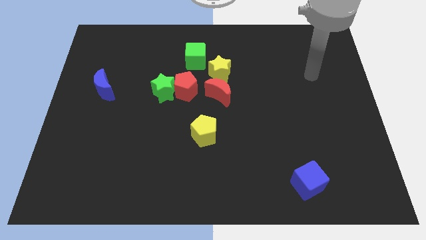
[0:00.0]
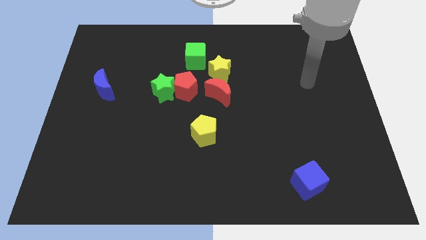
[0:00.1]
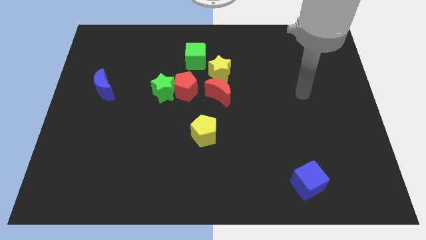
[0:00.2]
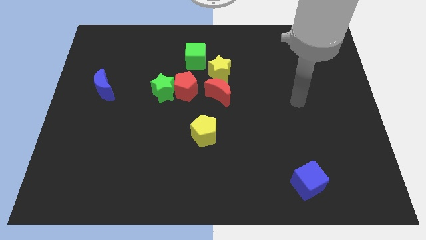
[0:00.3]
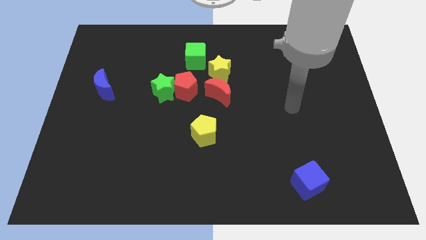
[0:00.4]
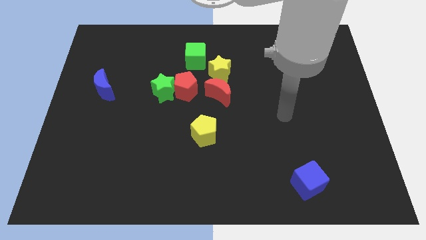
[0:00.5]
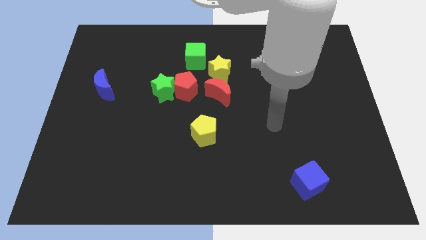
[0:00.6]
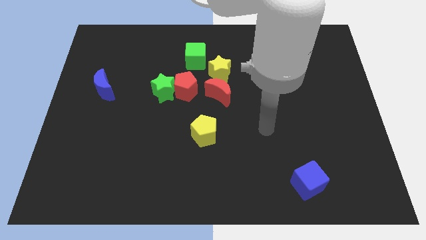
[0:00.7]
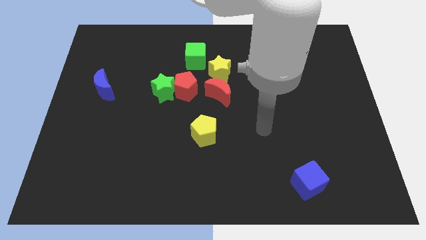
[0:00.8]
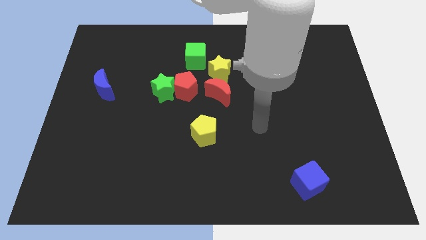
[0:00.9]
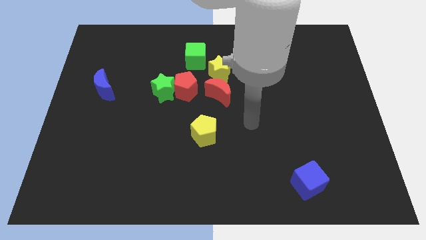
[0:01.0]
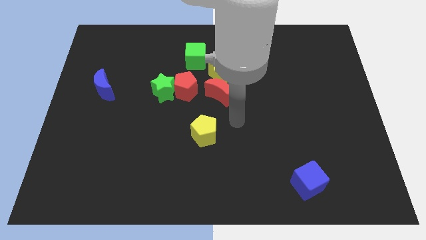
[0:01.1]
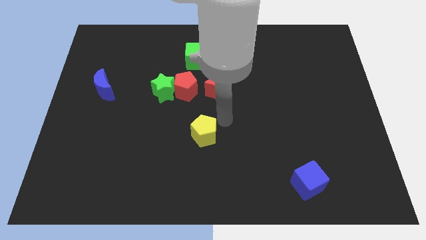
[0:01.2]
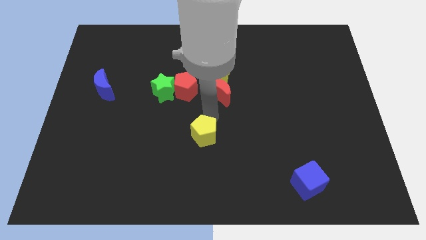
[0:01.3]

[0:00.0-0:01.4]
move your arm above the yellow pentagon

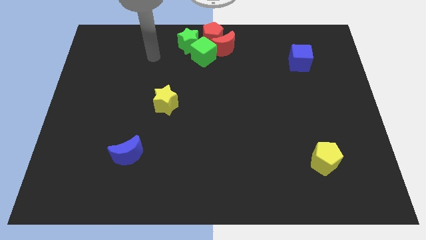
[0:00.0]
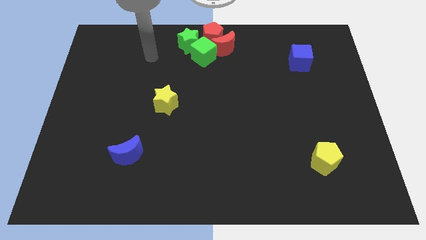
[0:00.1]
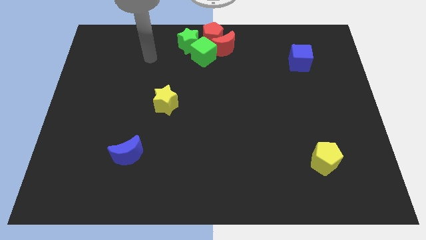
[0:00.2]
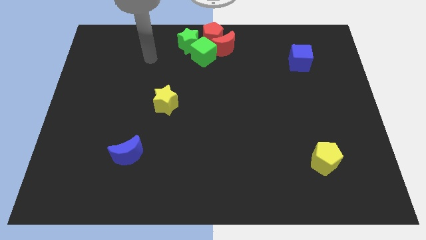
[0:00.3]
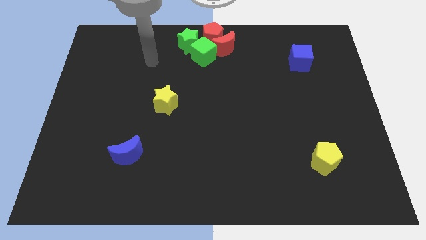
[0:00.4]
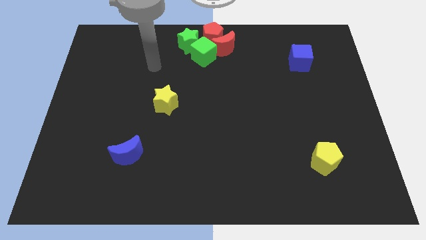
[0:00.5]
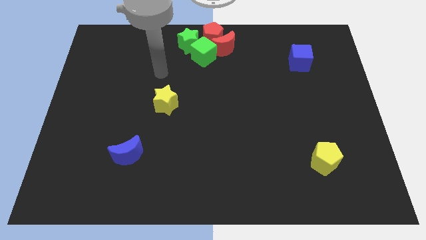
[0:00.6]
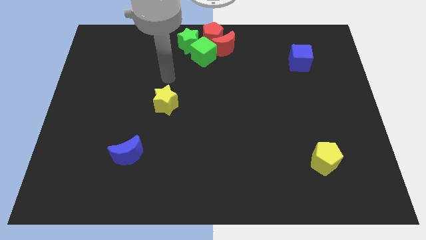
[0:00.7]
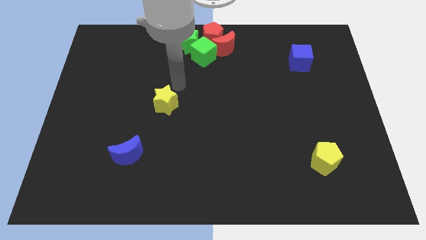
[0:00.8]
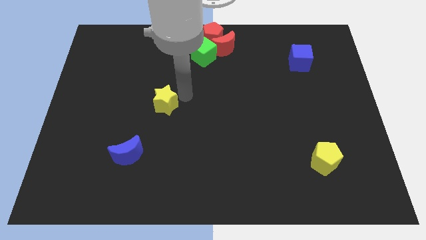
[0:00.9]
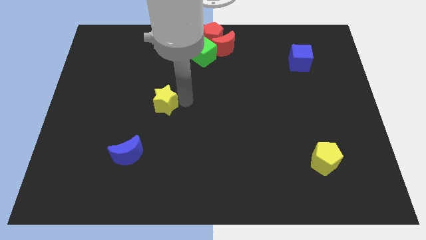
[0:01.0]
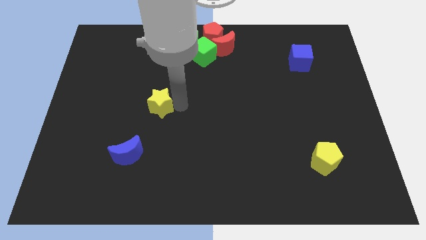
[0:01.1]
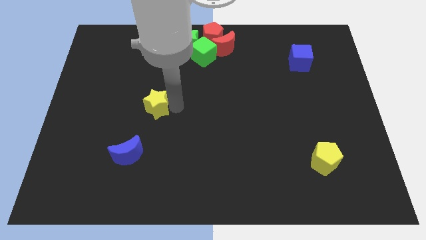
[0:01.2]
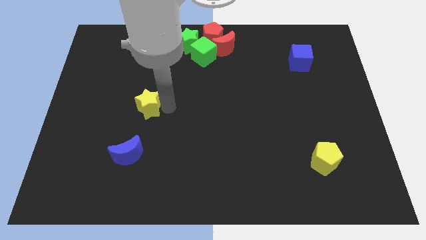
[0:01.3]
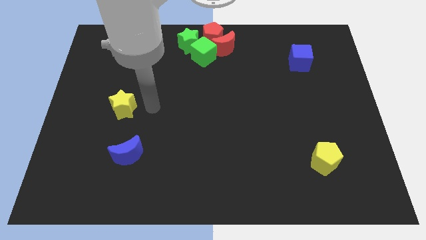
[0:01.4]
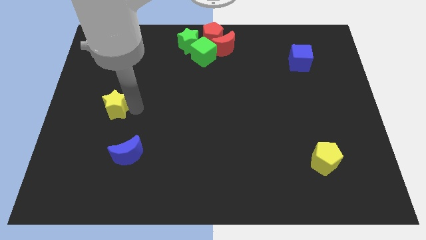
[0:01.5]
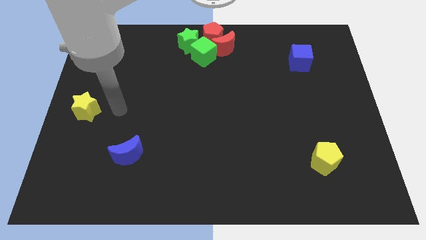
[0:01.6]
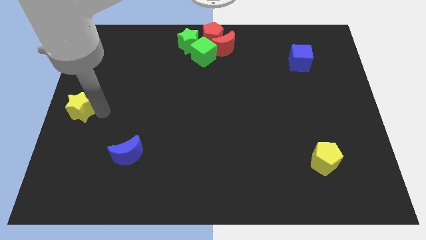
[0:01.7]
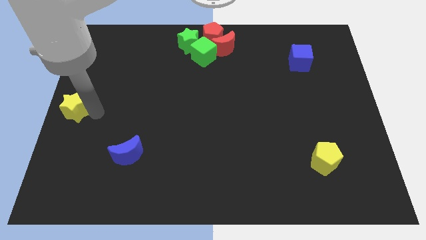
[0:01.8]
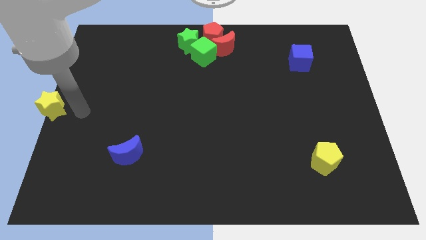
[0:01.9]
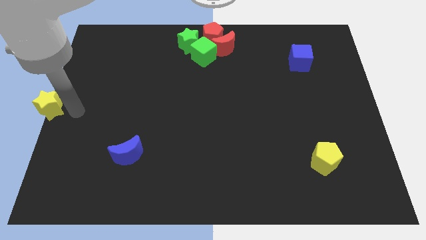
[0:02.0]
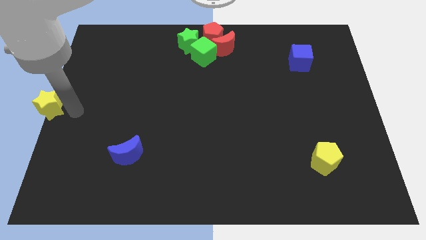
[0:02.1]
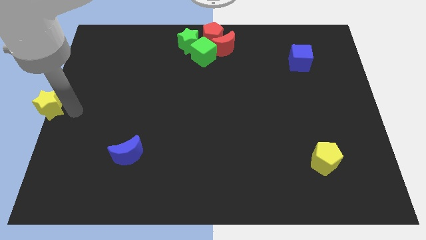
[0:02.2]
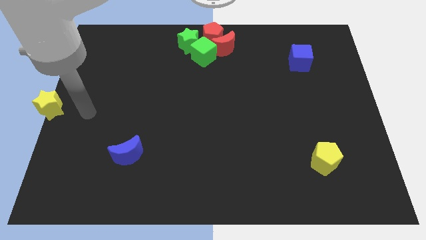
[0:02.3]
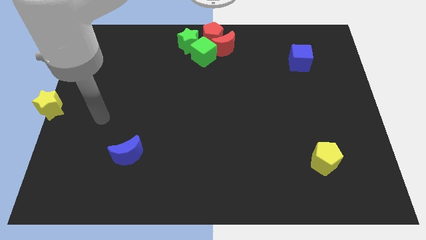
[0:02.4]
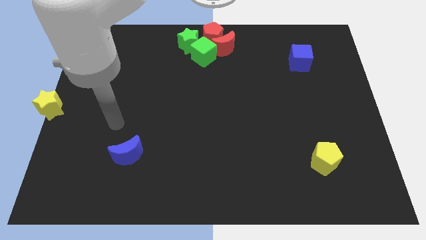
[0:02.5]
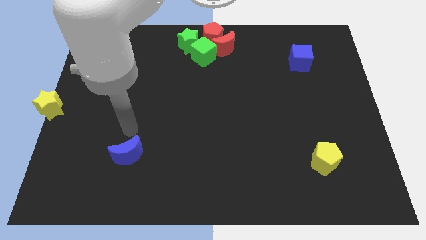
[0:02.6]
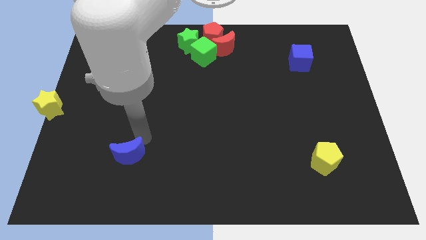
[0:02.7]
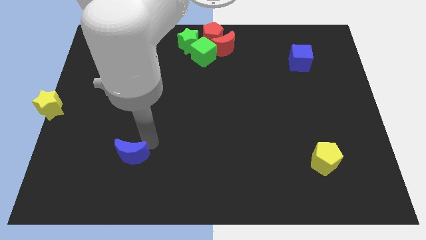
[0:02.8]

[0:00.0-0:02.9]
move yellow star to the left middle

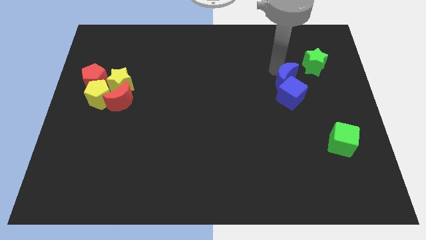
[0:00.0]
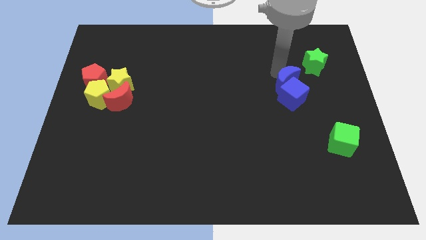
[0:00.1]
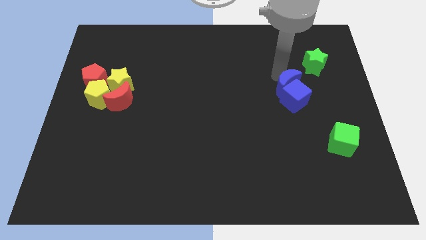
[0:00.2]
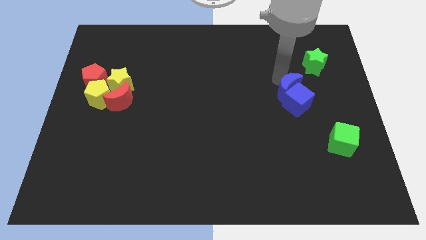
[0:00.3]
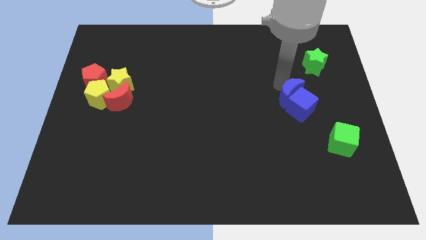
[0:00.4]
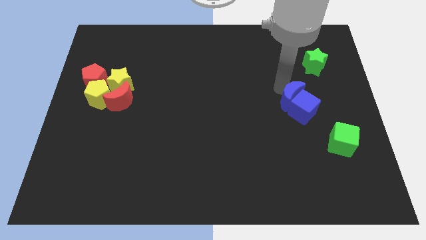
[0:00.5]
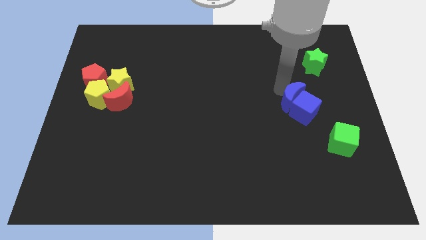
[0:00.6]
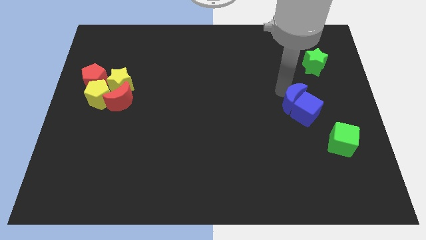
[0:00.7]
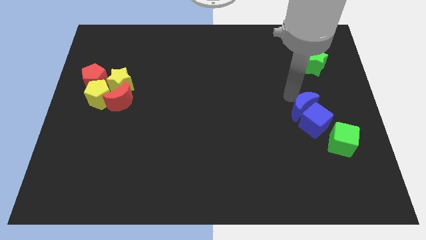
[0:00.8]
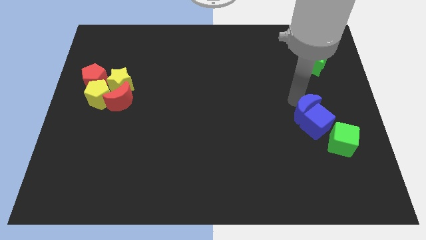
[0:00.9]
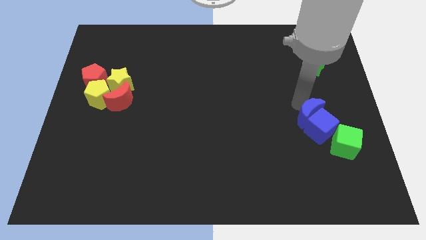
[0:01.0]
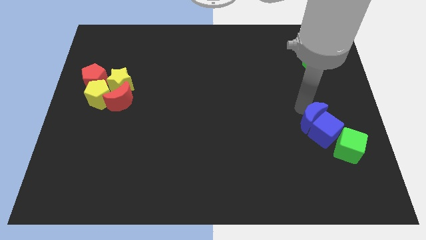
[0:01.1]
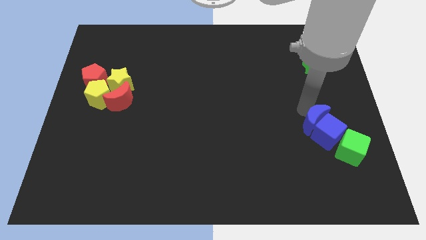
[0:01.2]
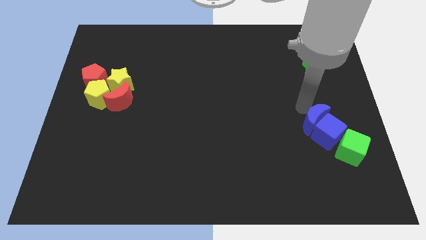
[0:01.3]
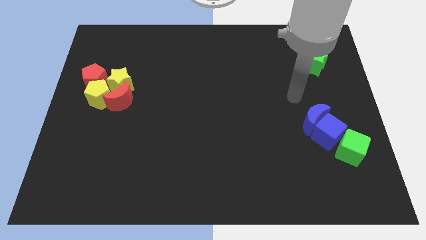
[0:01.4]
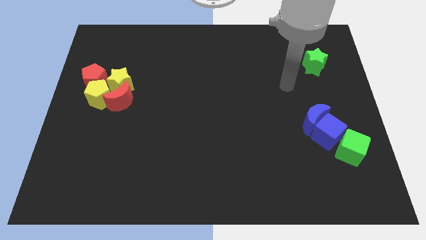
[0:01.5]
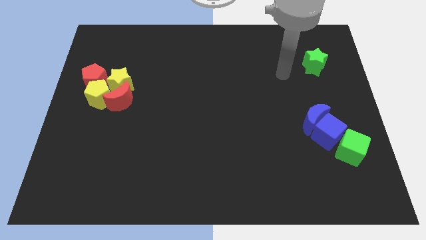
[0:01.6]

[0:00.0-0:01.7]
move blue crescent and blue cube into green cube

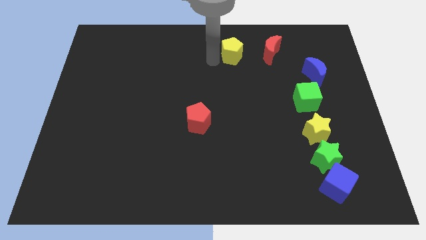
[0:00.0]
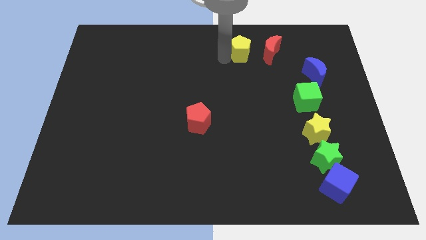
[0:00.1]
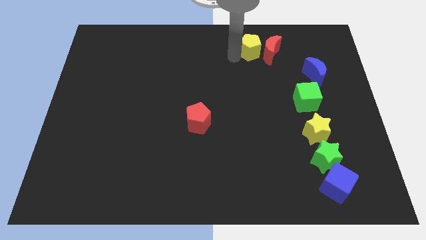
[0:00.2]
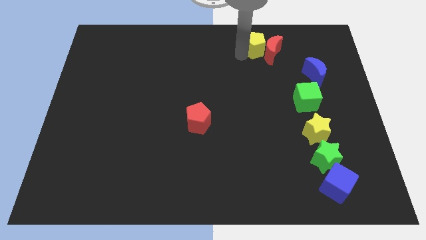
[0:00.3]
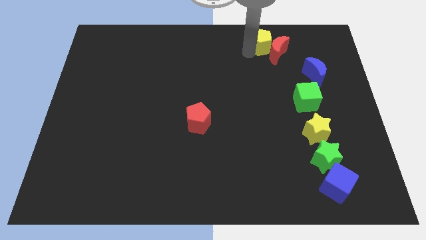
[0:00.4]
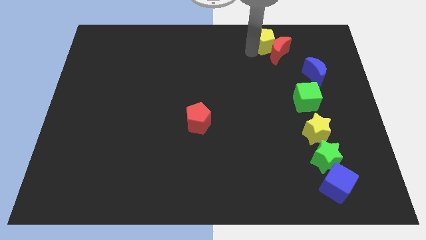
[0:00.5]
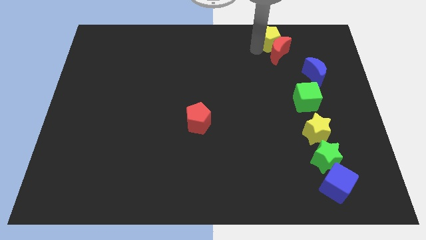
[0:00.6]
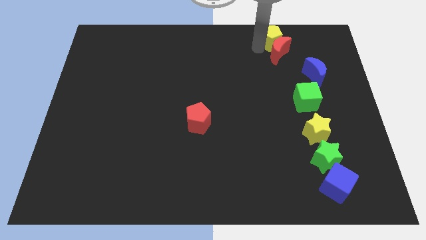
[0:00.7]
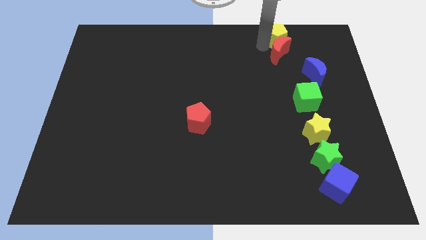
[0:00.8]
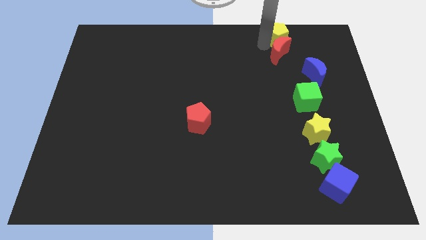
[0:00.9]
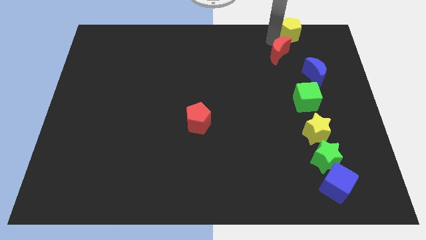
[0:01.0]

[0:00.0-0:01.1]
place yellow pentagon to the top of the red moon

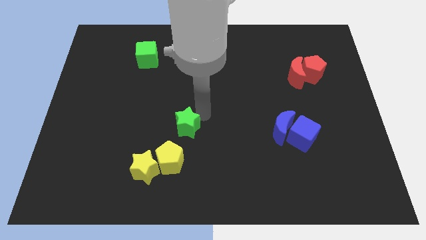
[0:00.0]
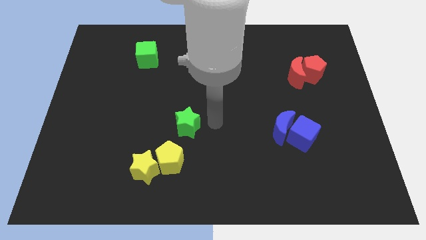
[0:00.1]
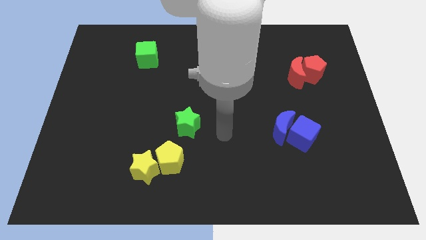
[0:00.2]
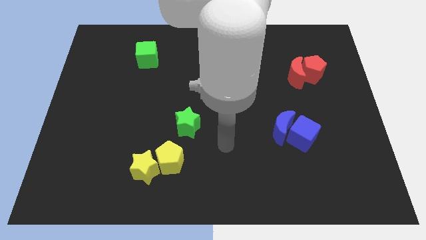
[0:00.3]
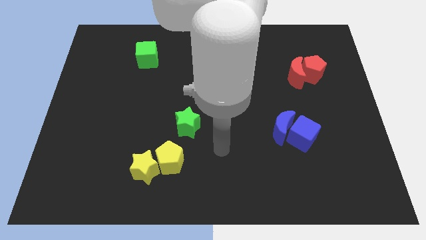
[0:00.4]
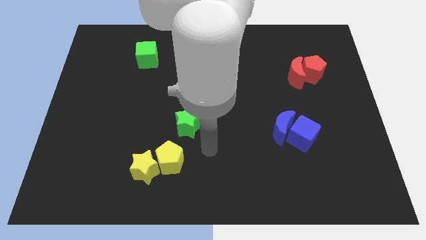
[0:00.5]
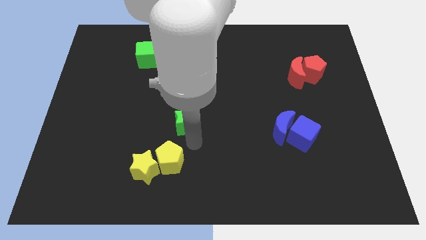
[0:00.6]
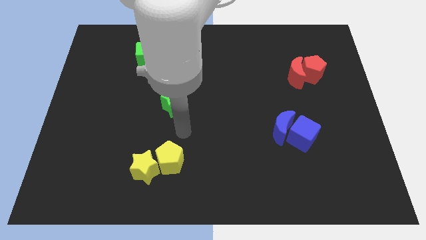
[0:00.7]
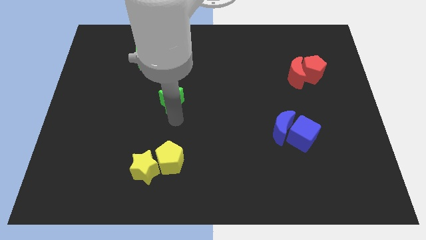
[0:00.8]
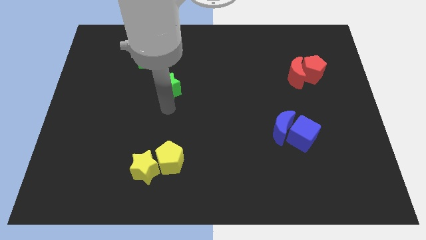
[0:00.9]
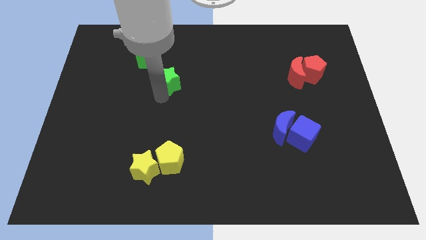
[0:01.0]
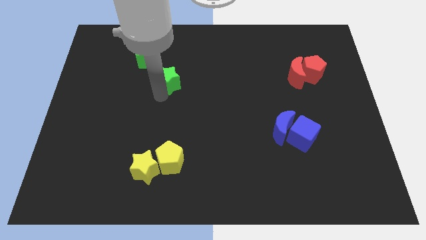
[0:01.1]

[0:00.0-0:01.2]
slide the green star vertically above the yellow pentagon

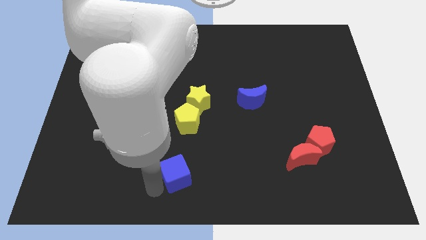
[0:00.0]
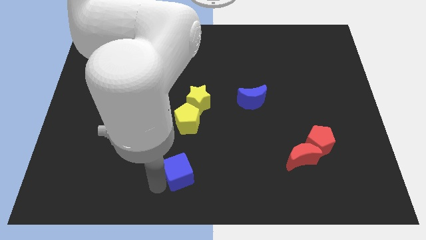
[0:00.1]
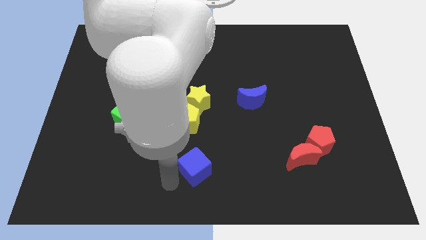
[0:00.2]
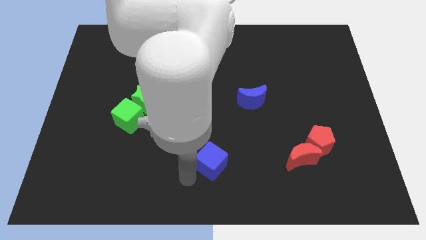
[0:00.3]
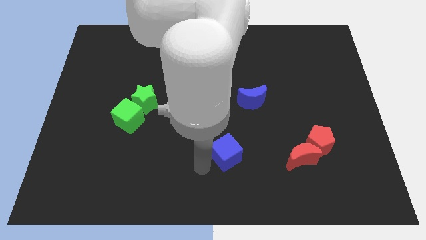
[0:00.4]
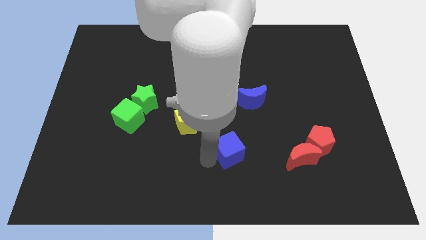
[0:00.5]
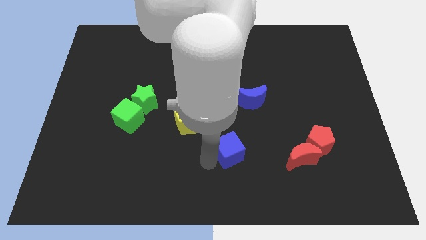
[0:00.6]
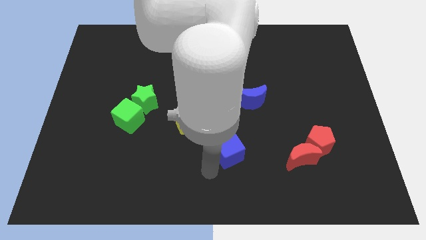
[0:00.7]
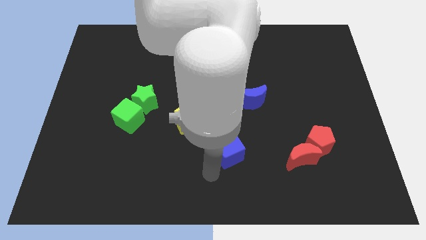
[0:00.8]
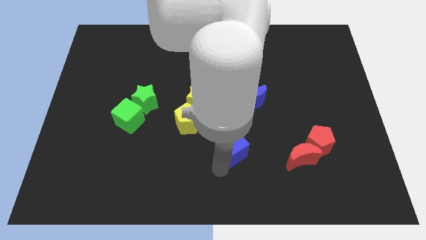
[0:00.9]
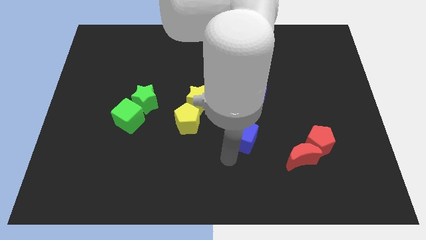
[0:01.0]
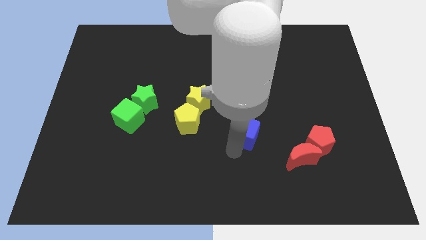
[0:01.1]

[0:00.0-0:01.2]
push the blue cube parallel to the bottom of the blue crescent
